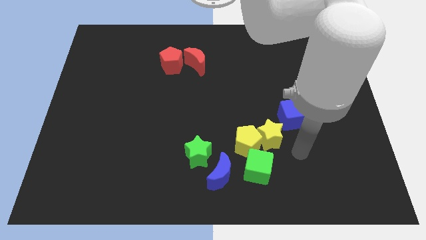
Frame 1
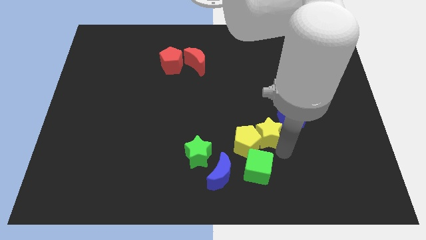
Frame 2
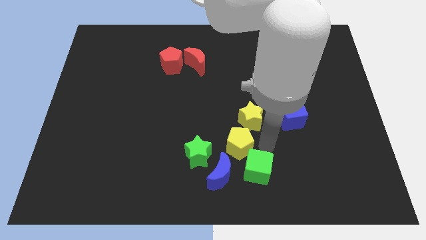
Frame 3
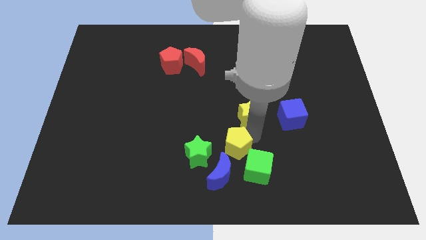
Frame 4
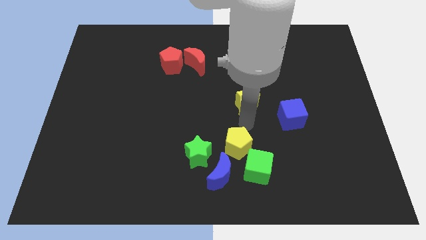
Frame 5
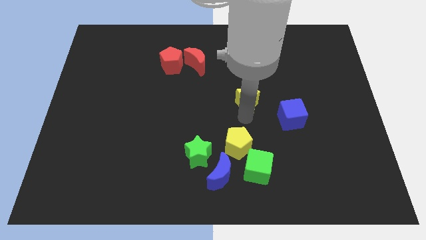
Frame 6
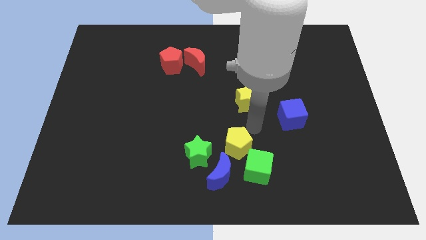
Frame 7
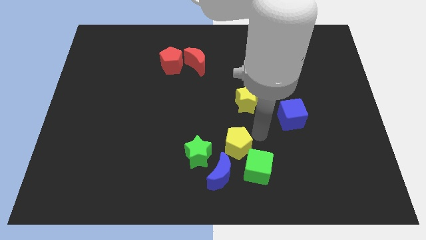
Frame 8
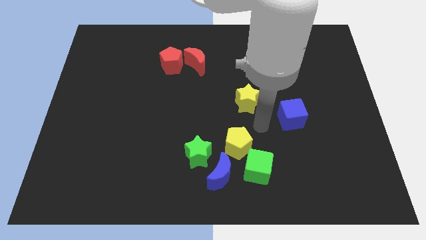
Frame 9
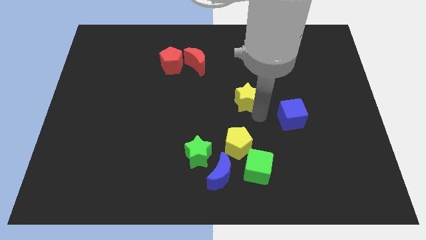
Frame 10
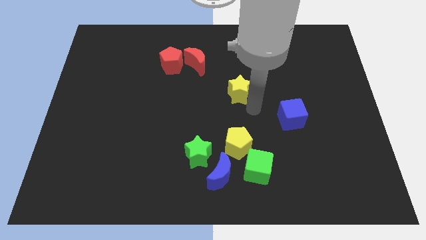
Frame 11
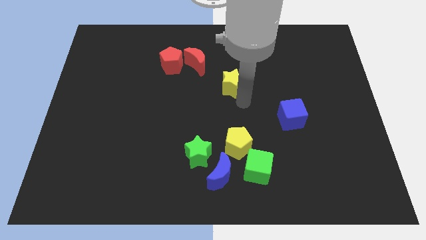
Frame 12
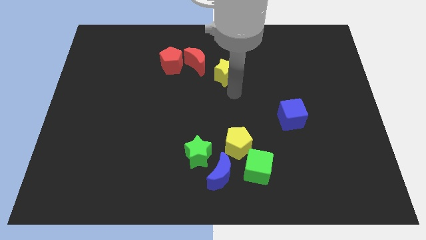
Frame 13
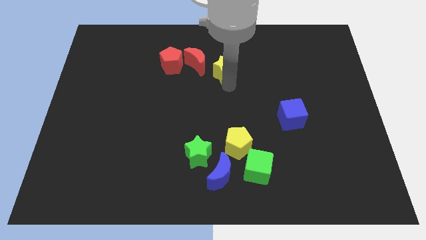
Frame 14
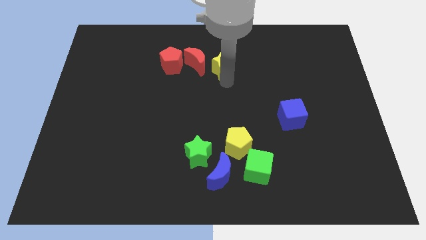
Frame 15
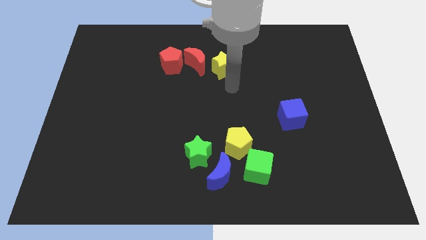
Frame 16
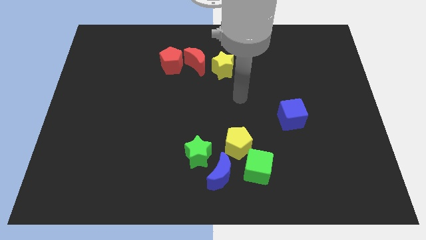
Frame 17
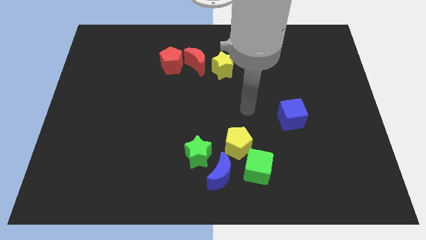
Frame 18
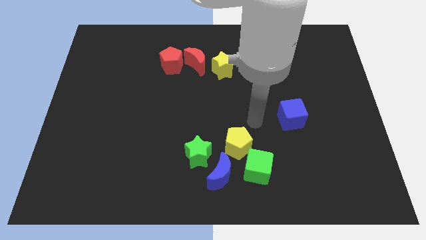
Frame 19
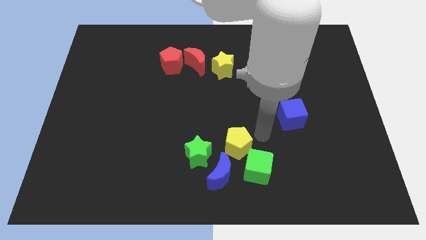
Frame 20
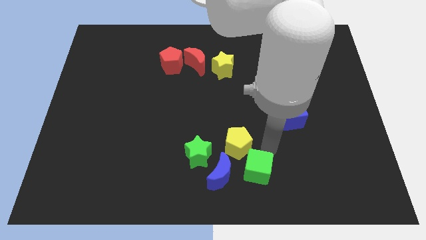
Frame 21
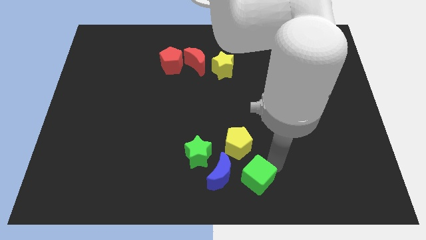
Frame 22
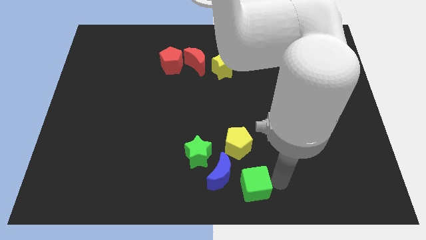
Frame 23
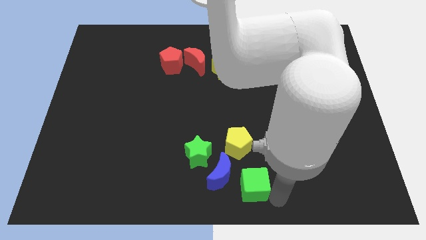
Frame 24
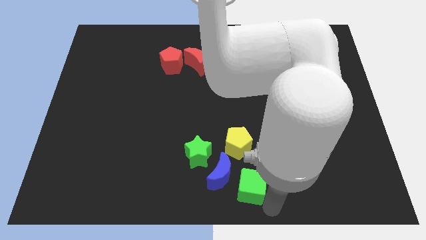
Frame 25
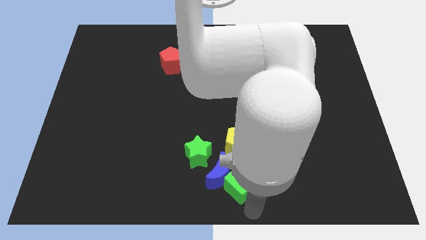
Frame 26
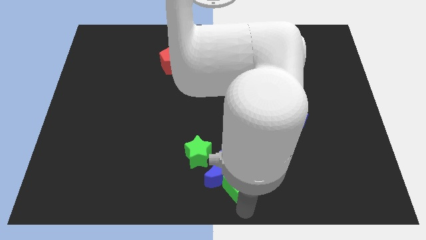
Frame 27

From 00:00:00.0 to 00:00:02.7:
place yellow star to the right of red moon

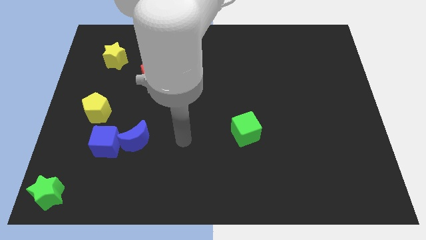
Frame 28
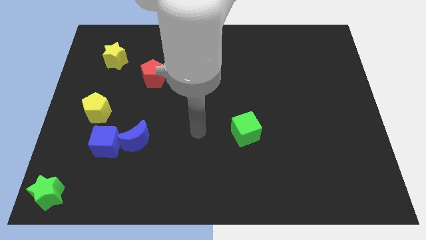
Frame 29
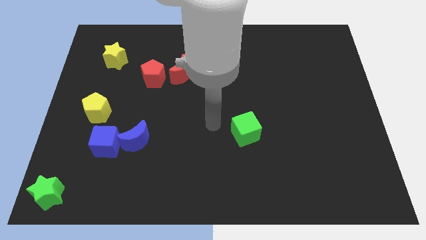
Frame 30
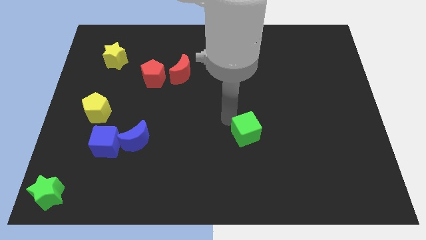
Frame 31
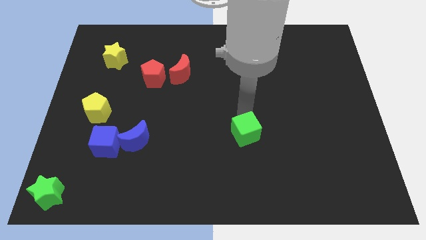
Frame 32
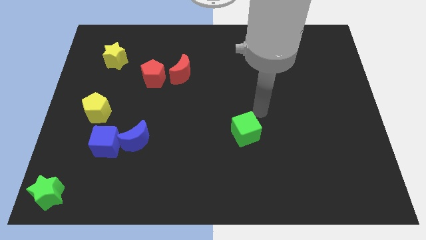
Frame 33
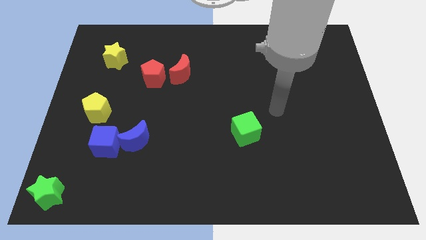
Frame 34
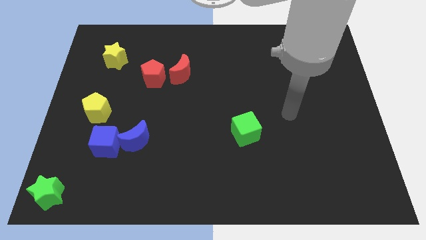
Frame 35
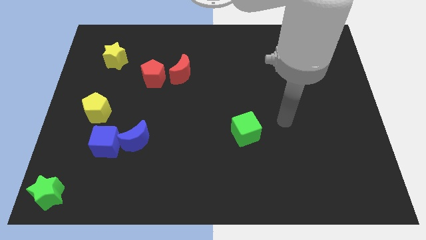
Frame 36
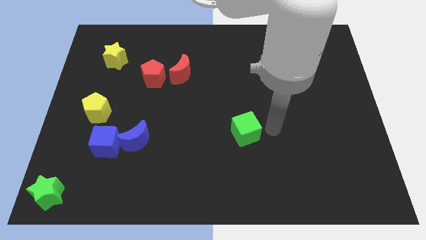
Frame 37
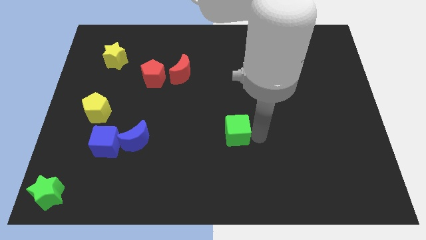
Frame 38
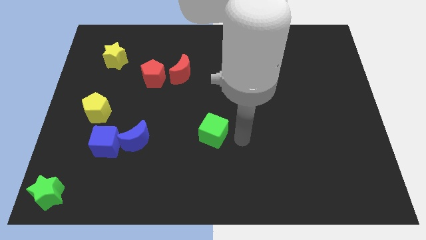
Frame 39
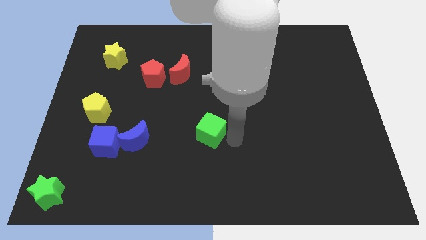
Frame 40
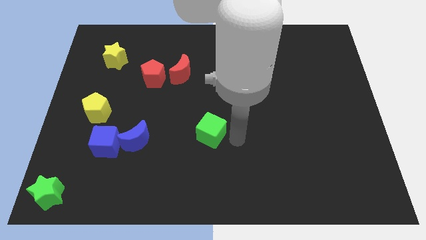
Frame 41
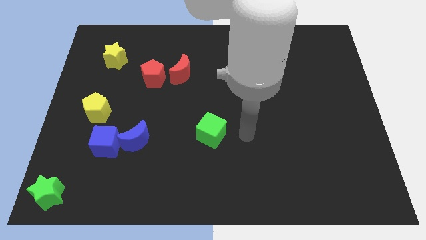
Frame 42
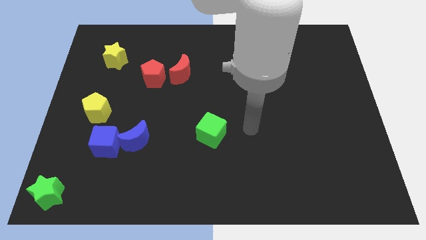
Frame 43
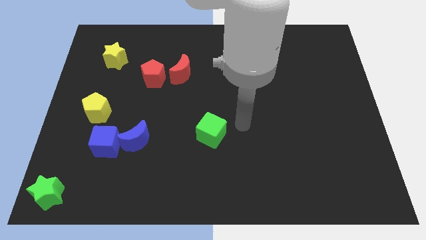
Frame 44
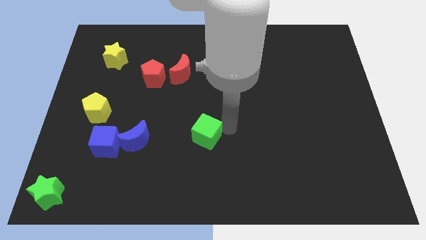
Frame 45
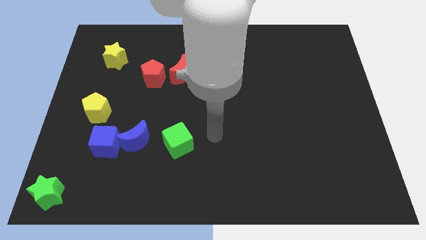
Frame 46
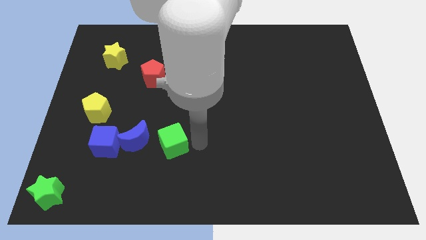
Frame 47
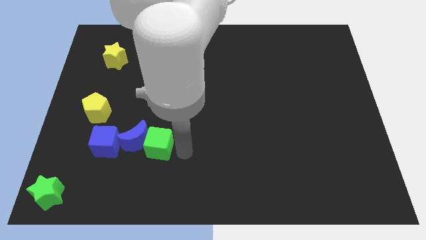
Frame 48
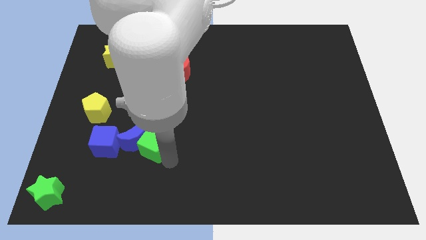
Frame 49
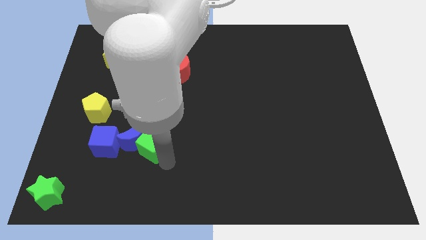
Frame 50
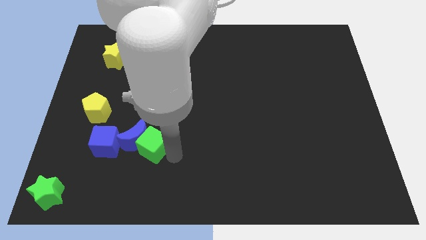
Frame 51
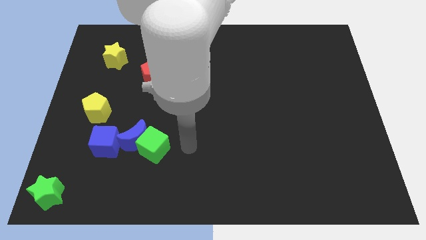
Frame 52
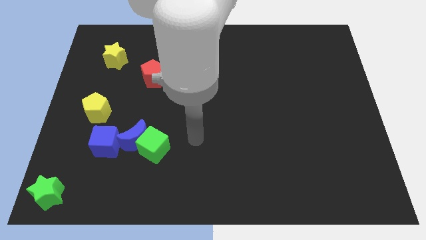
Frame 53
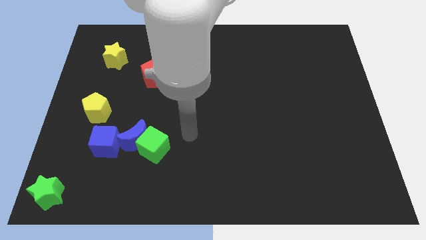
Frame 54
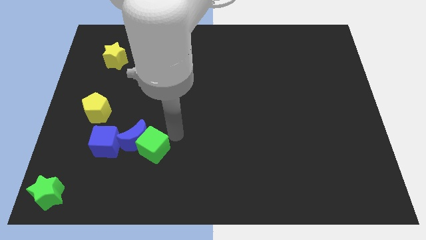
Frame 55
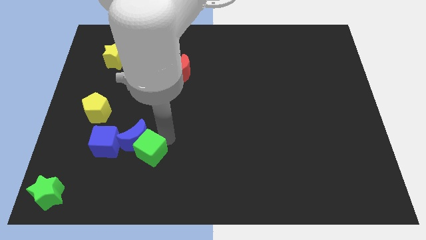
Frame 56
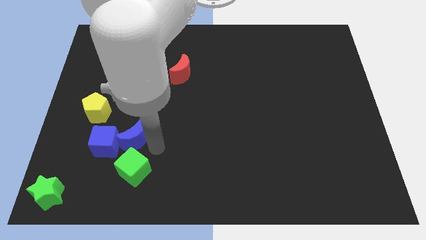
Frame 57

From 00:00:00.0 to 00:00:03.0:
push green cube below blue crescent

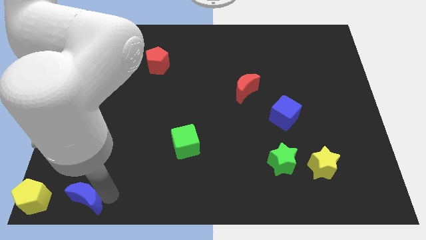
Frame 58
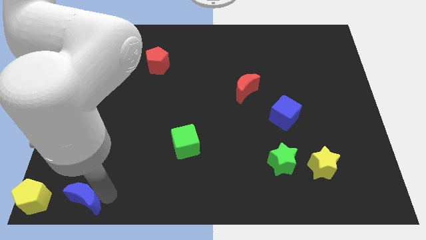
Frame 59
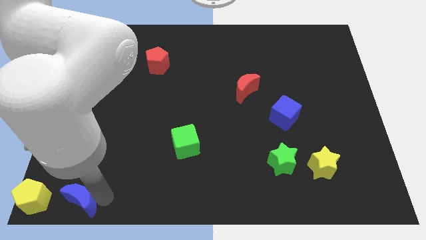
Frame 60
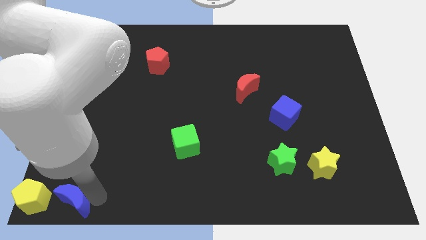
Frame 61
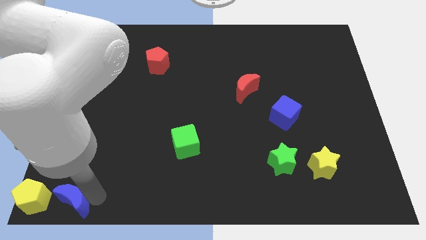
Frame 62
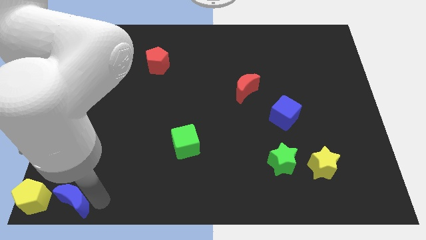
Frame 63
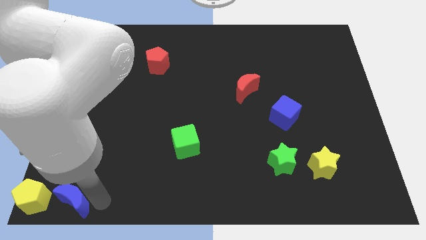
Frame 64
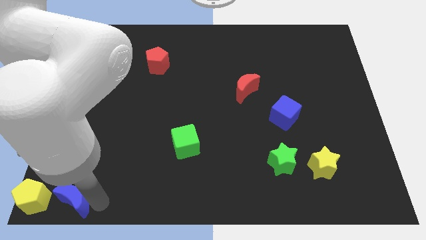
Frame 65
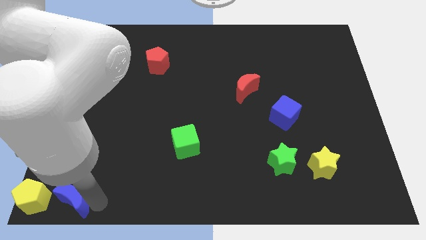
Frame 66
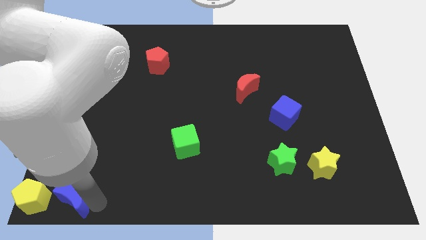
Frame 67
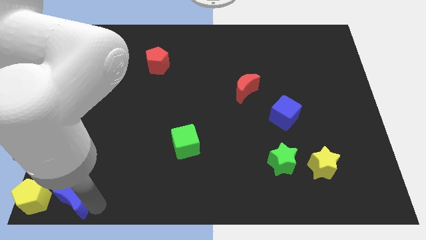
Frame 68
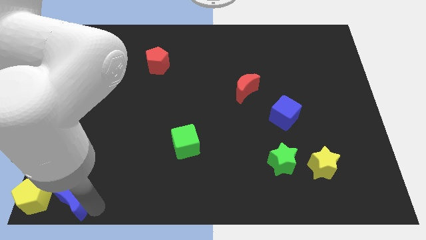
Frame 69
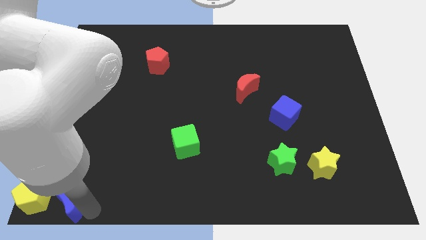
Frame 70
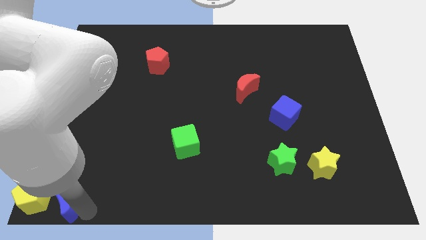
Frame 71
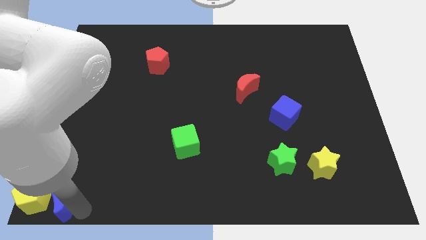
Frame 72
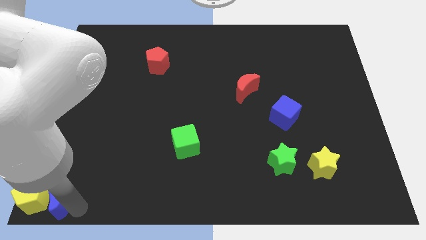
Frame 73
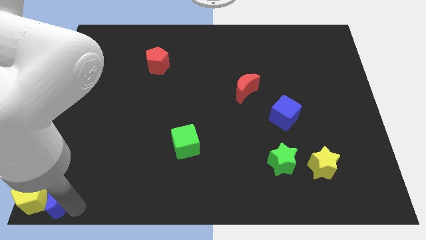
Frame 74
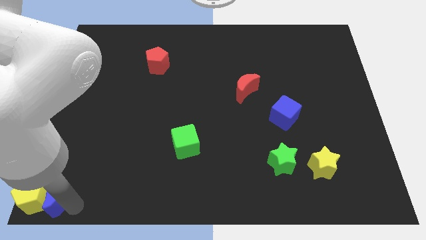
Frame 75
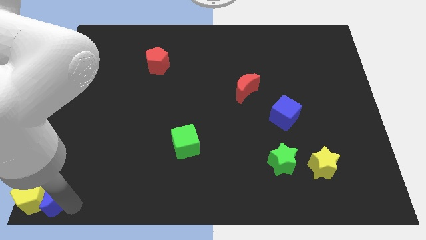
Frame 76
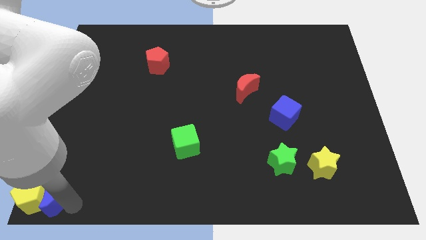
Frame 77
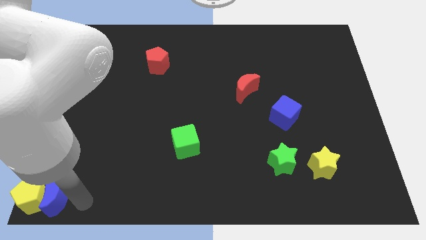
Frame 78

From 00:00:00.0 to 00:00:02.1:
push blue moon into yellow pentagon

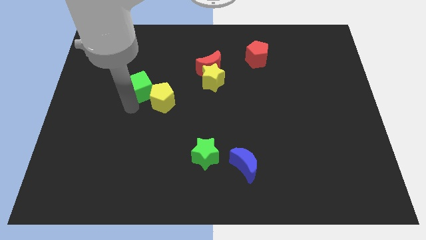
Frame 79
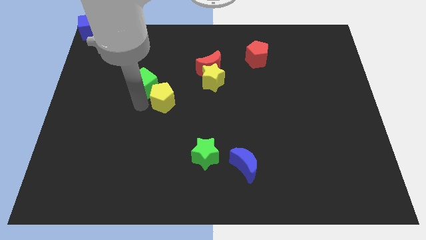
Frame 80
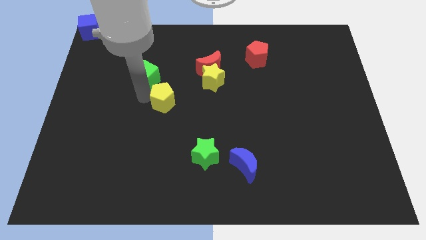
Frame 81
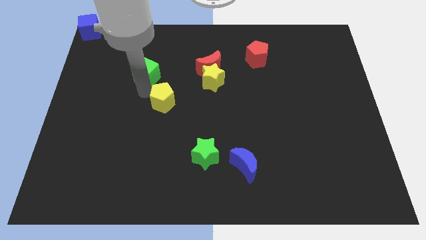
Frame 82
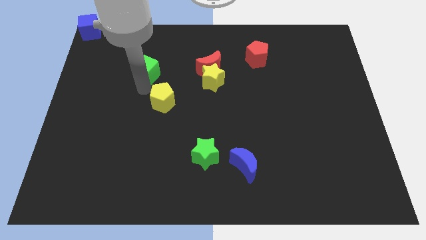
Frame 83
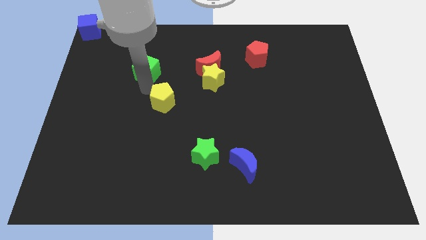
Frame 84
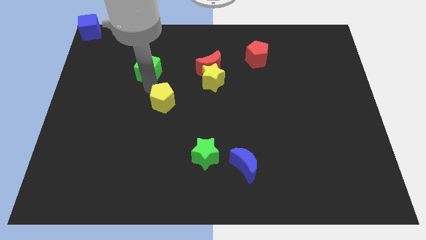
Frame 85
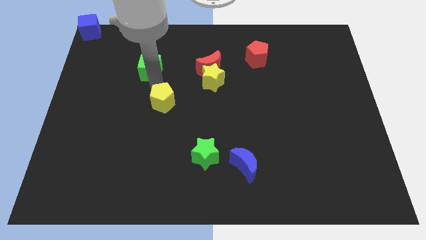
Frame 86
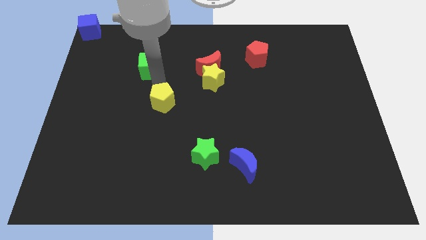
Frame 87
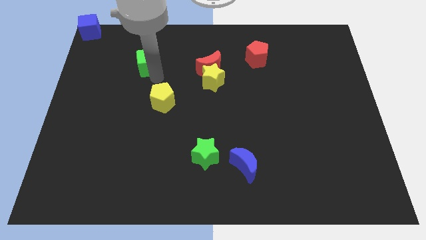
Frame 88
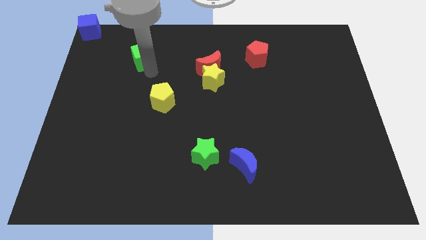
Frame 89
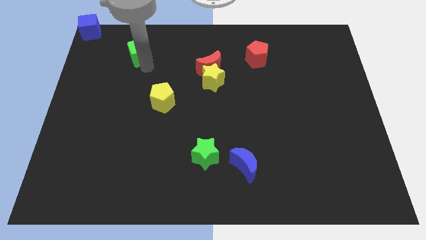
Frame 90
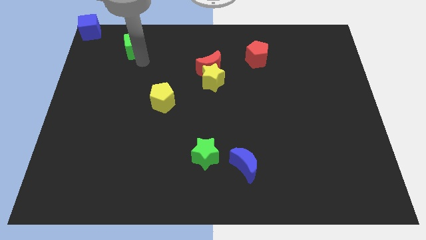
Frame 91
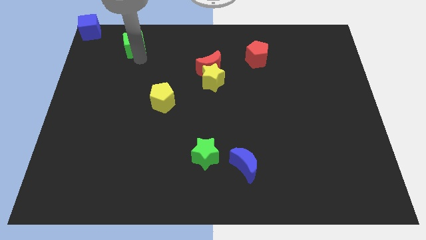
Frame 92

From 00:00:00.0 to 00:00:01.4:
move the green cube away from the yellow pentagon
